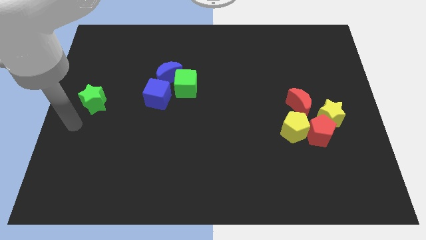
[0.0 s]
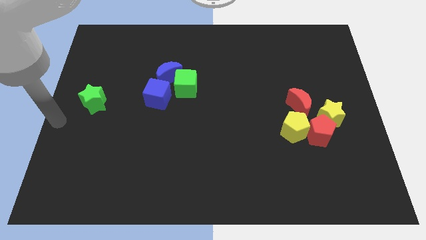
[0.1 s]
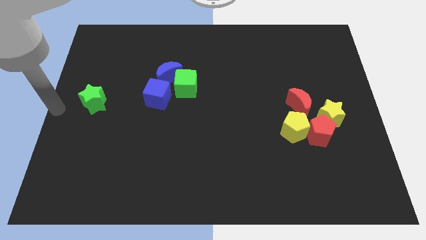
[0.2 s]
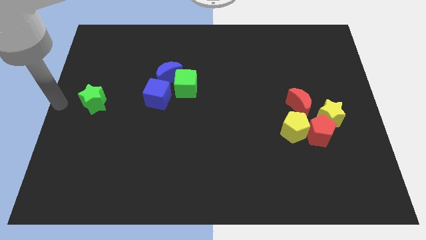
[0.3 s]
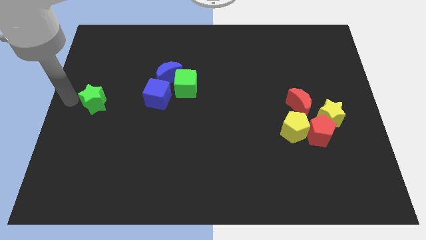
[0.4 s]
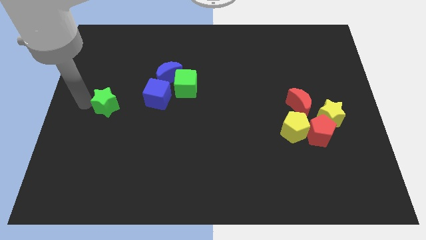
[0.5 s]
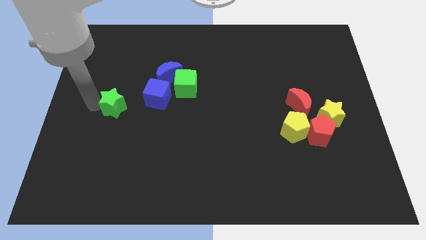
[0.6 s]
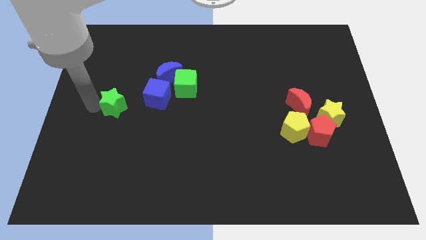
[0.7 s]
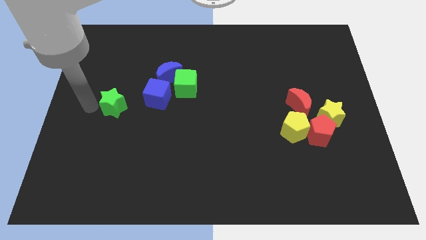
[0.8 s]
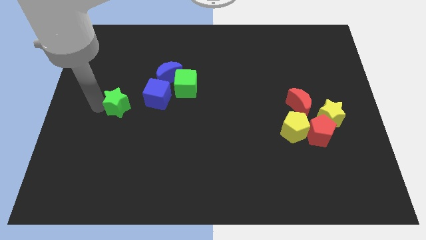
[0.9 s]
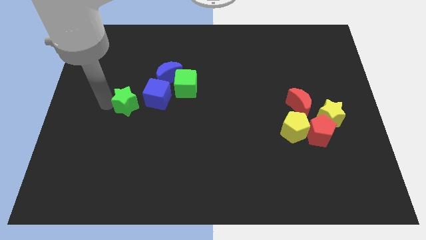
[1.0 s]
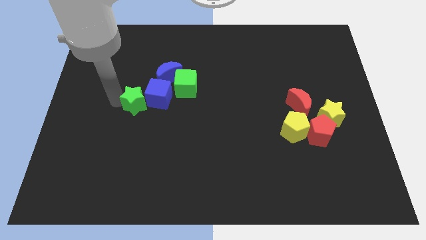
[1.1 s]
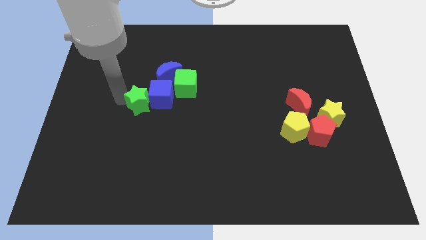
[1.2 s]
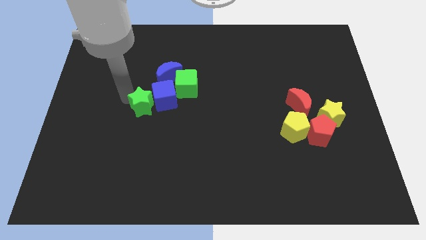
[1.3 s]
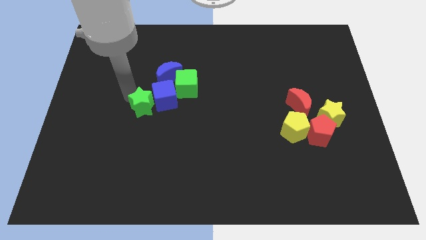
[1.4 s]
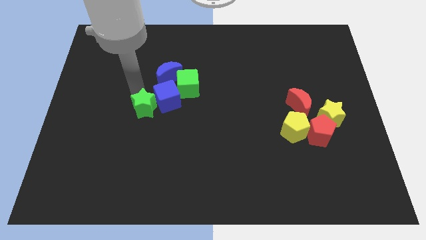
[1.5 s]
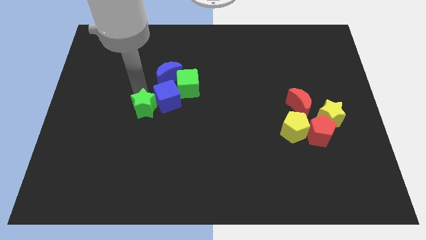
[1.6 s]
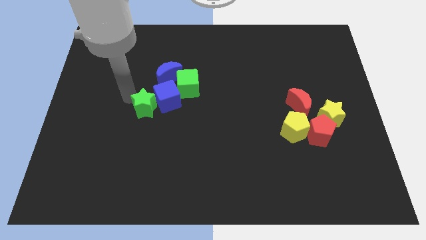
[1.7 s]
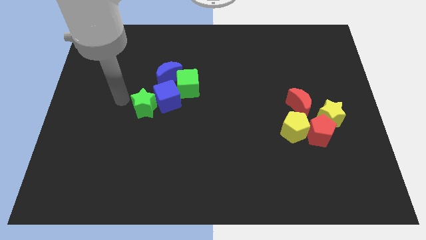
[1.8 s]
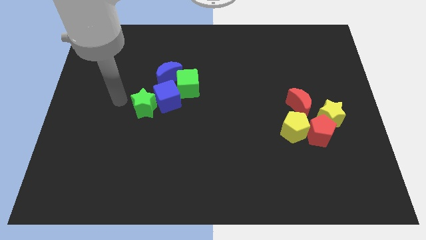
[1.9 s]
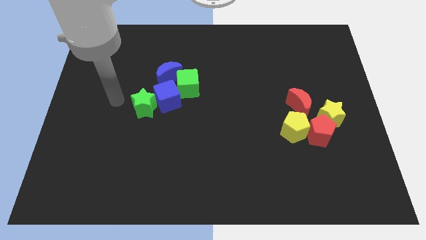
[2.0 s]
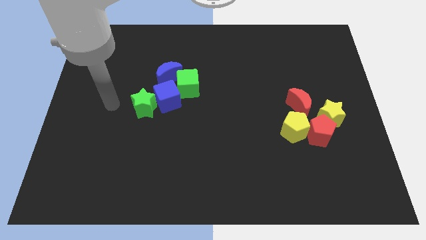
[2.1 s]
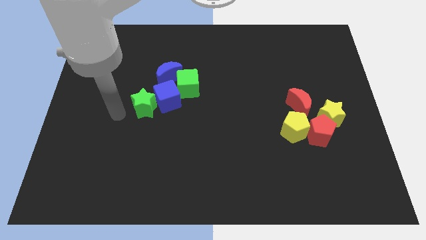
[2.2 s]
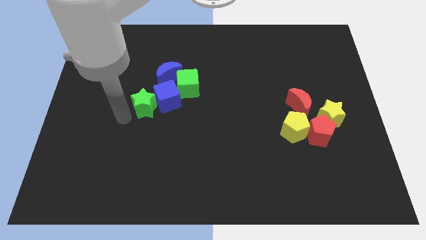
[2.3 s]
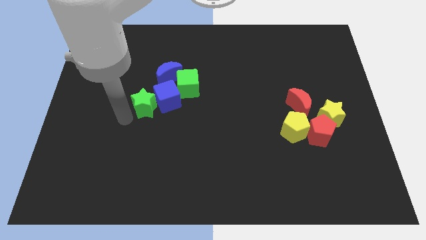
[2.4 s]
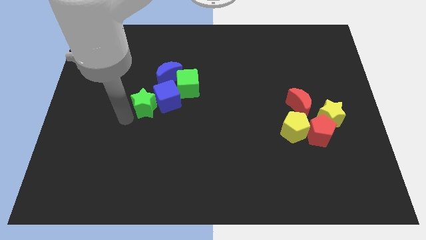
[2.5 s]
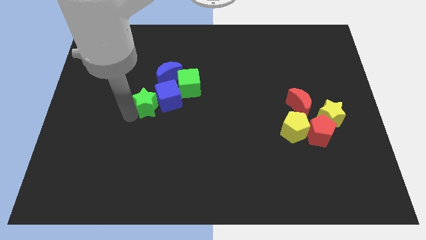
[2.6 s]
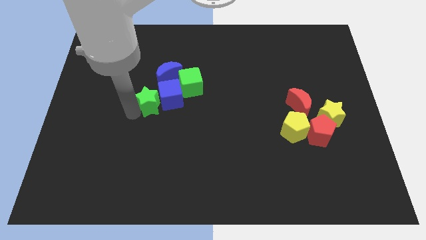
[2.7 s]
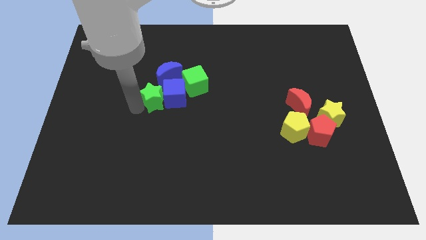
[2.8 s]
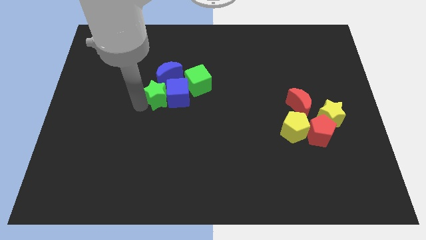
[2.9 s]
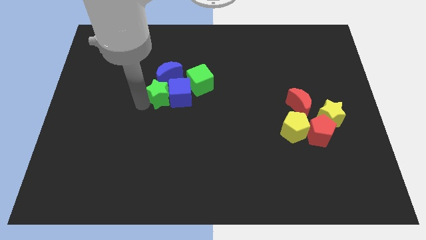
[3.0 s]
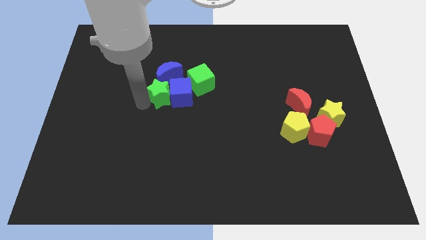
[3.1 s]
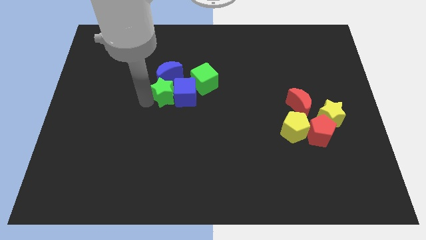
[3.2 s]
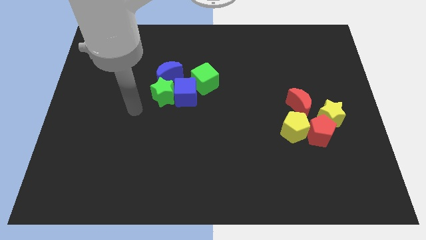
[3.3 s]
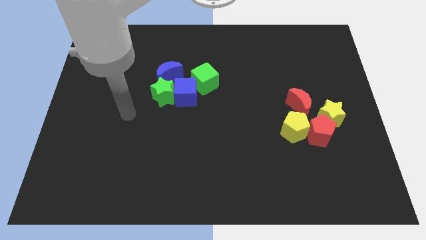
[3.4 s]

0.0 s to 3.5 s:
move the green star into the blue moon and blue cube

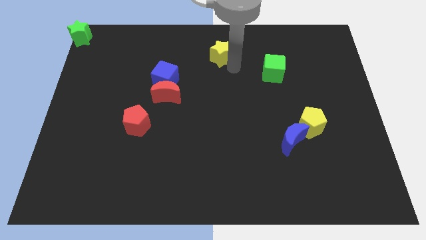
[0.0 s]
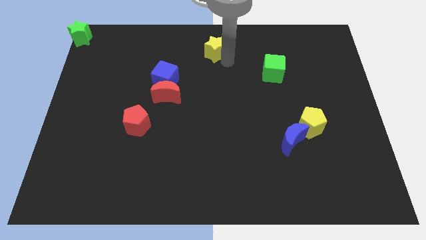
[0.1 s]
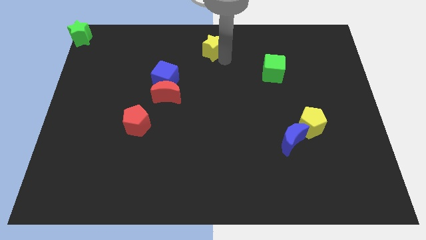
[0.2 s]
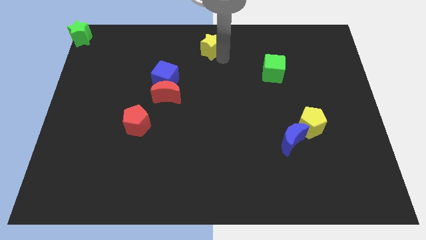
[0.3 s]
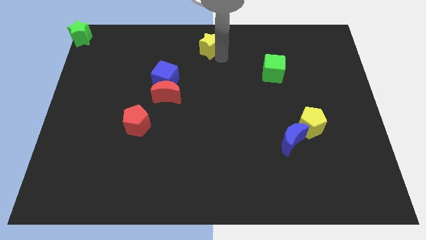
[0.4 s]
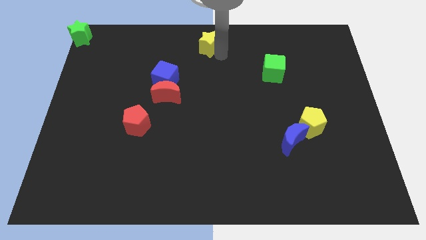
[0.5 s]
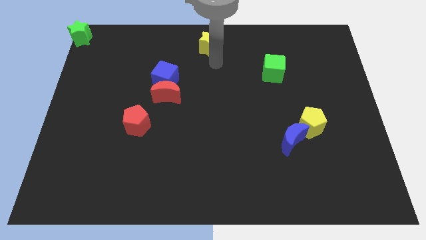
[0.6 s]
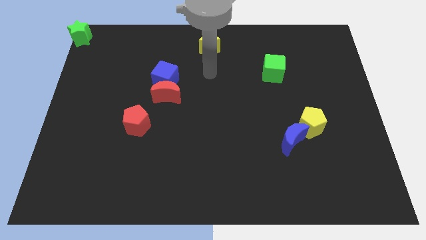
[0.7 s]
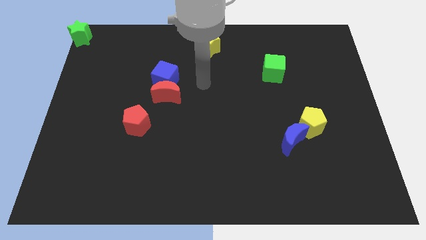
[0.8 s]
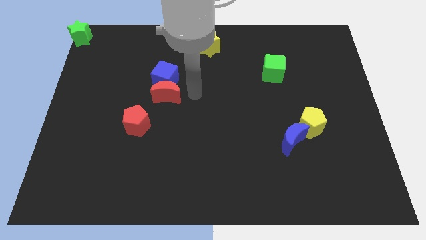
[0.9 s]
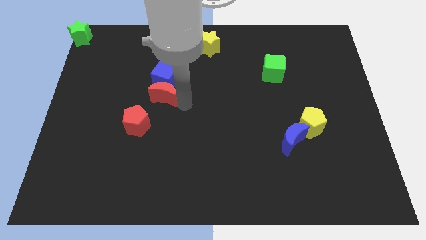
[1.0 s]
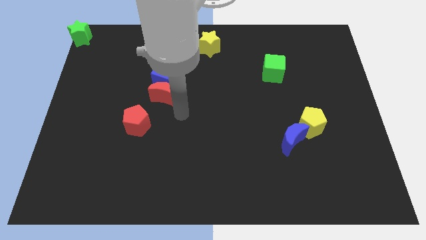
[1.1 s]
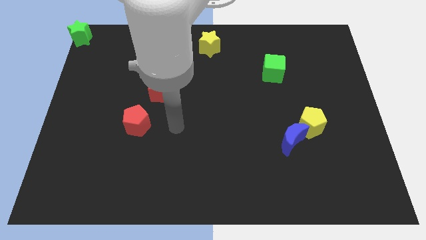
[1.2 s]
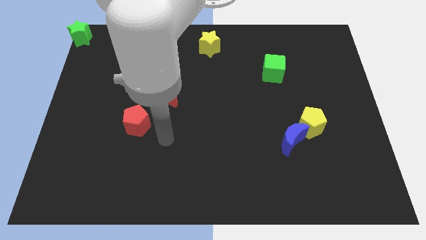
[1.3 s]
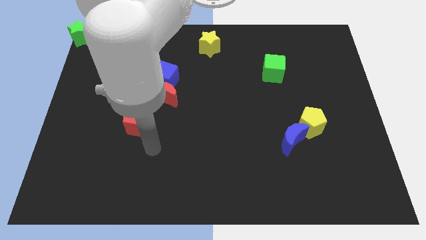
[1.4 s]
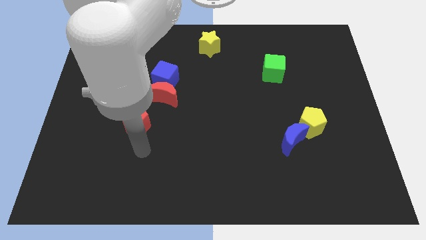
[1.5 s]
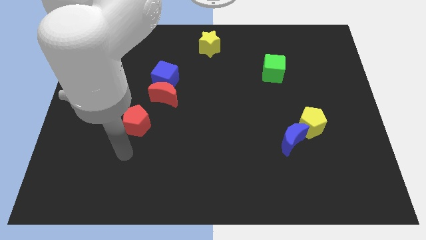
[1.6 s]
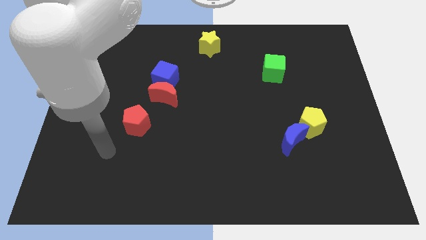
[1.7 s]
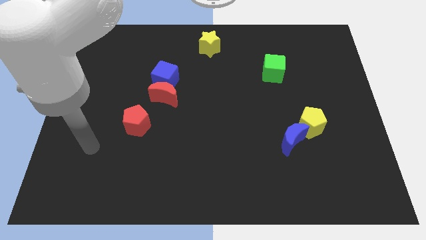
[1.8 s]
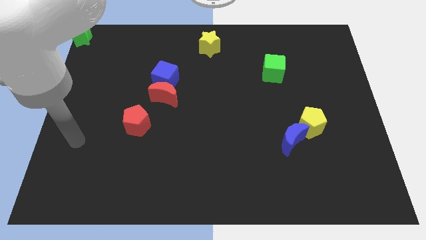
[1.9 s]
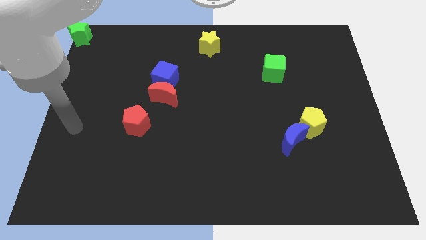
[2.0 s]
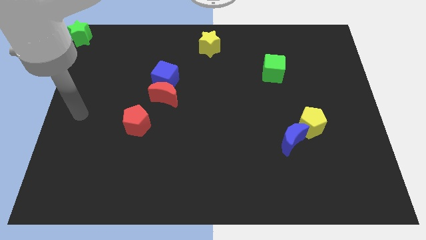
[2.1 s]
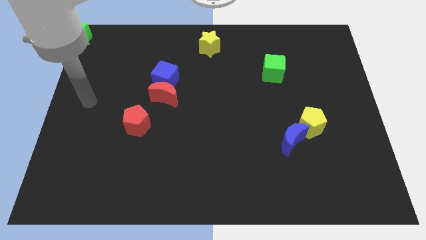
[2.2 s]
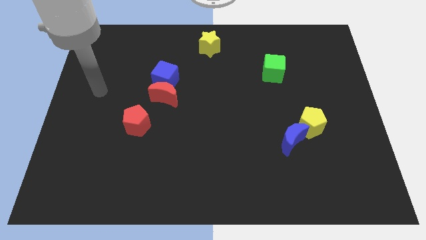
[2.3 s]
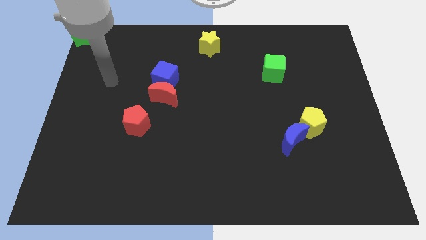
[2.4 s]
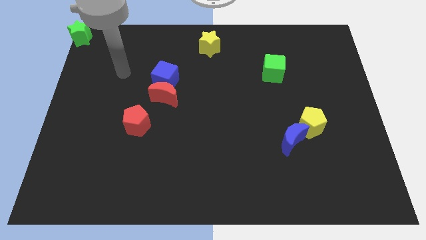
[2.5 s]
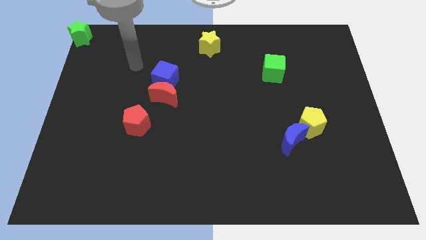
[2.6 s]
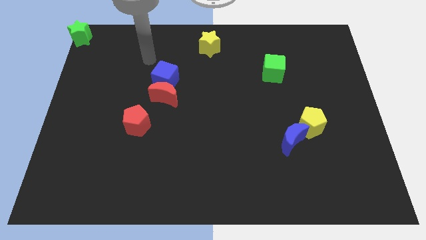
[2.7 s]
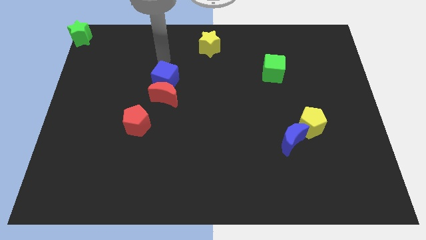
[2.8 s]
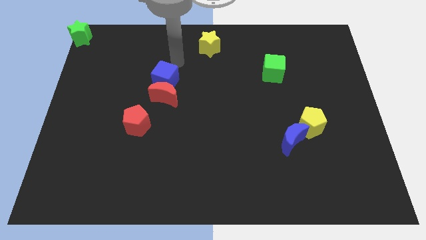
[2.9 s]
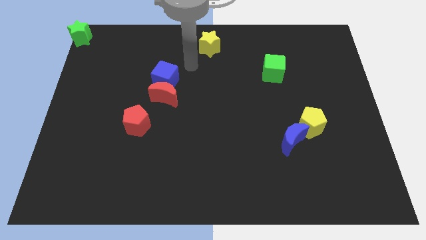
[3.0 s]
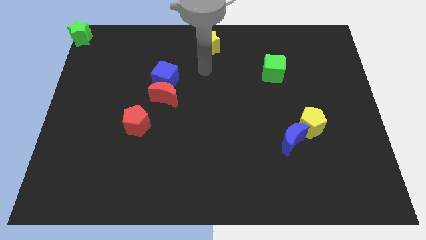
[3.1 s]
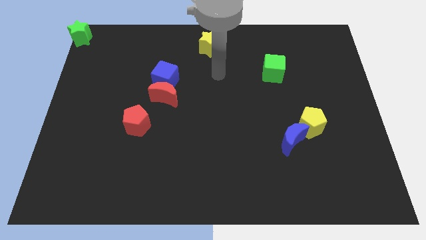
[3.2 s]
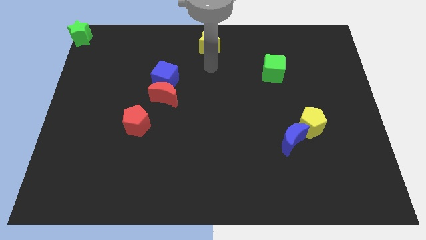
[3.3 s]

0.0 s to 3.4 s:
place the arm below the yellow star

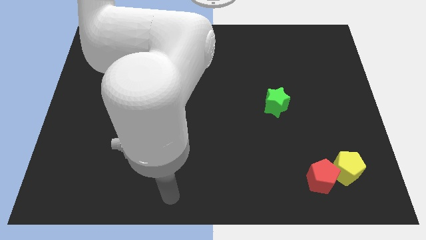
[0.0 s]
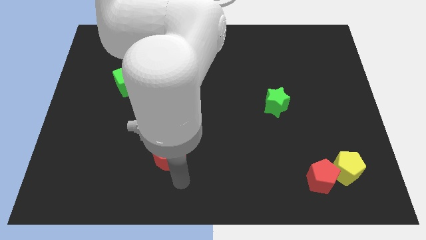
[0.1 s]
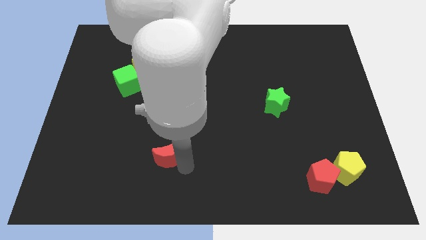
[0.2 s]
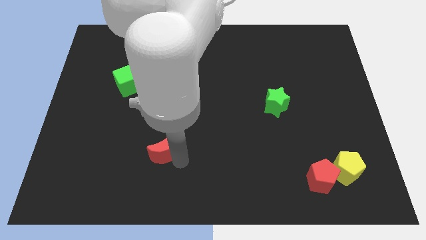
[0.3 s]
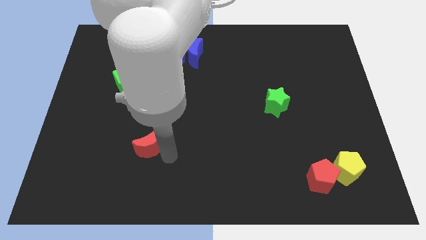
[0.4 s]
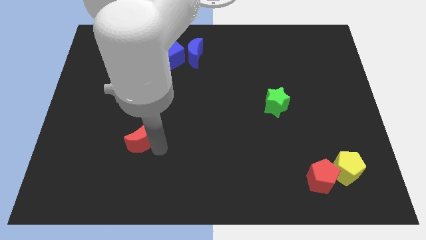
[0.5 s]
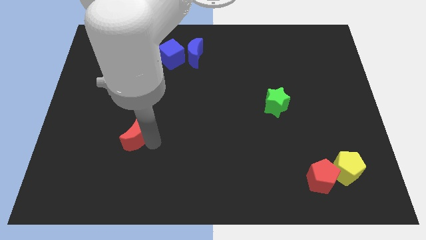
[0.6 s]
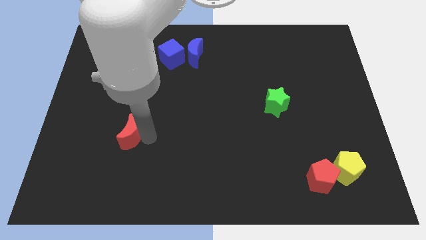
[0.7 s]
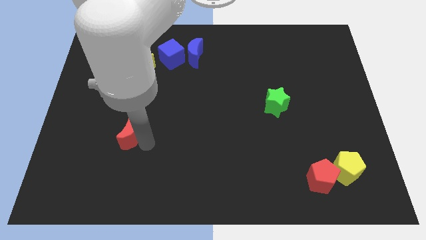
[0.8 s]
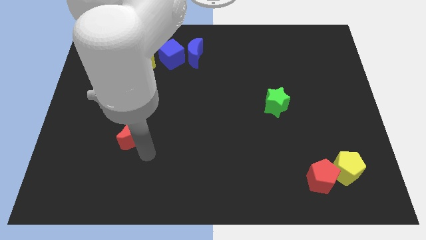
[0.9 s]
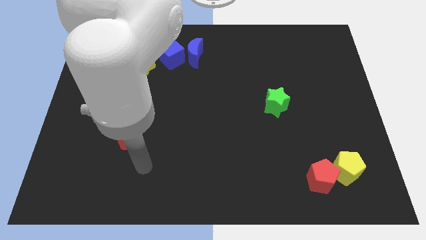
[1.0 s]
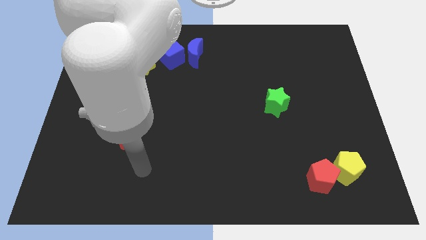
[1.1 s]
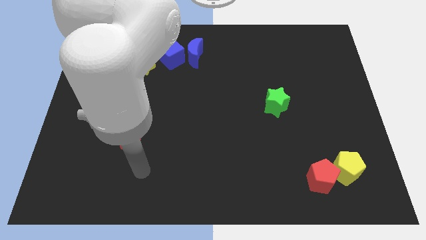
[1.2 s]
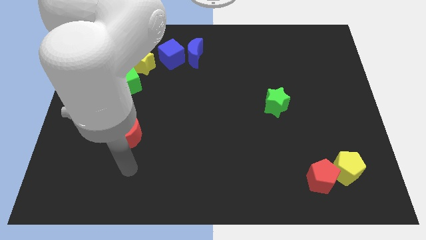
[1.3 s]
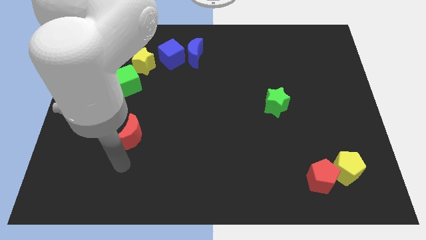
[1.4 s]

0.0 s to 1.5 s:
move the red crescent below the green cube

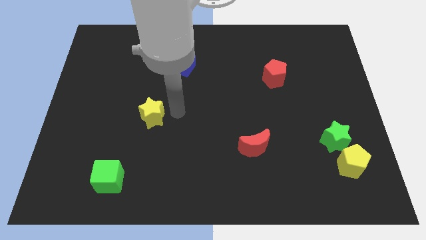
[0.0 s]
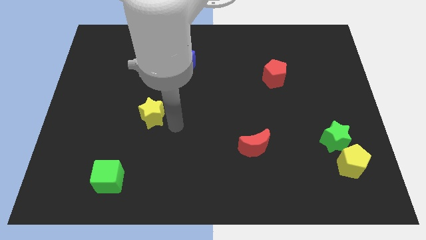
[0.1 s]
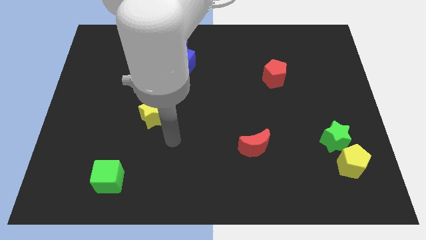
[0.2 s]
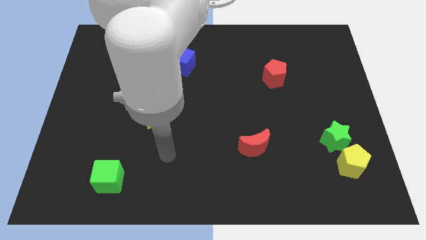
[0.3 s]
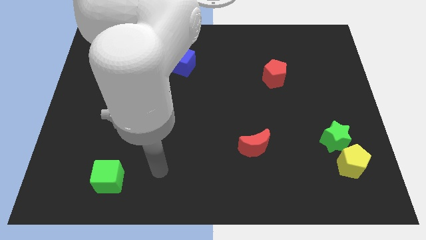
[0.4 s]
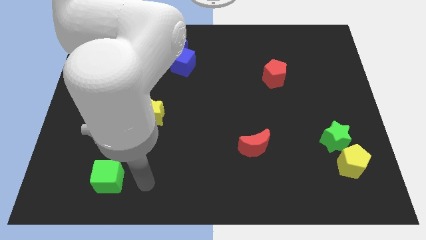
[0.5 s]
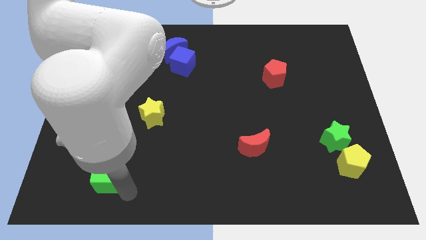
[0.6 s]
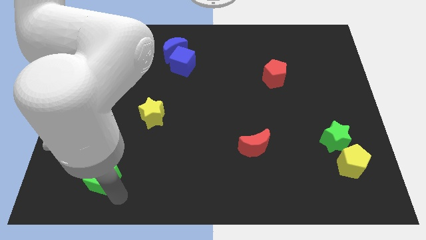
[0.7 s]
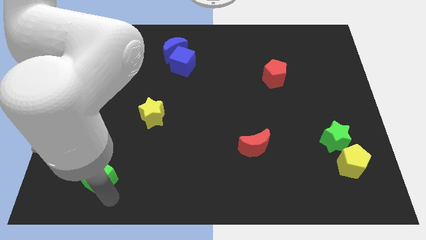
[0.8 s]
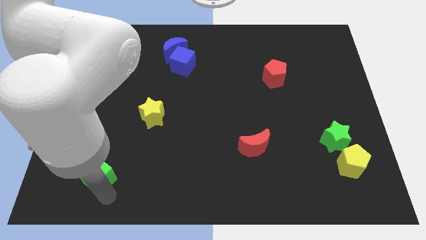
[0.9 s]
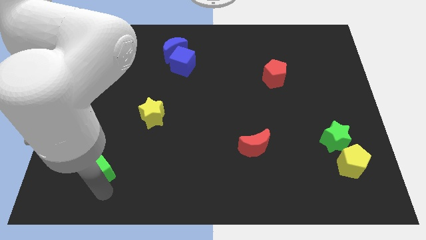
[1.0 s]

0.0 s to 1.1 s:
move the arm towards the green cube
